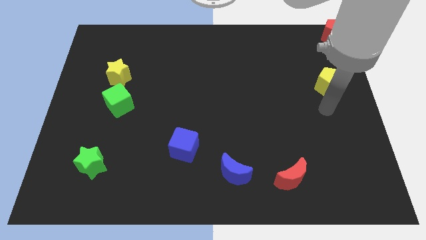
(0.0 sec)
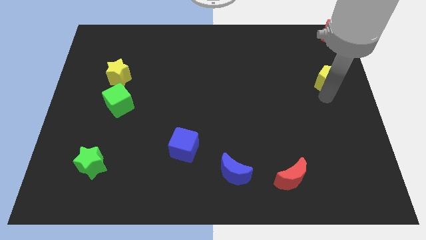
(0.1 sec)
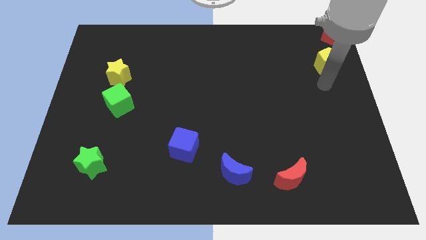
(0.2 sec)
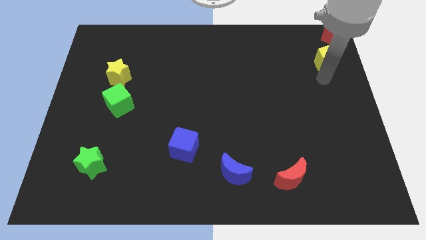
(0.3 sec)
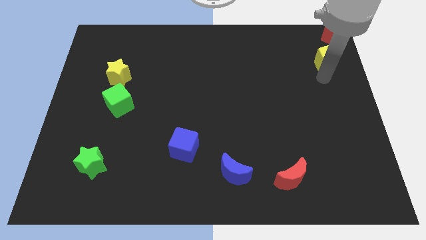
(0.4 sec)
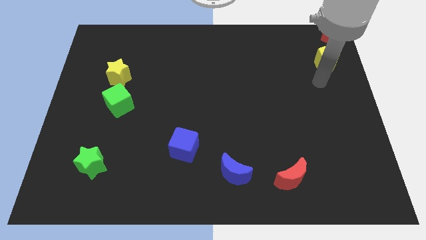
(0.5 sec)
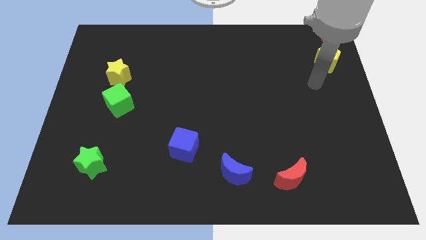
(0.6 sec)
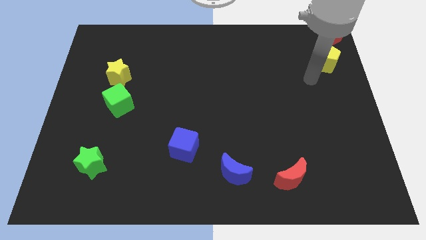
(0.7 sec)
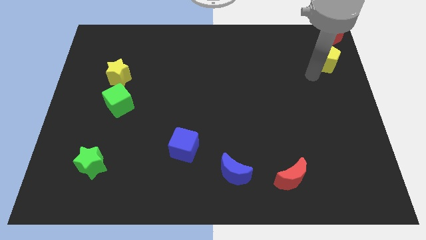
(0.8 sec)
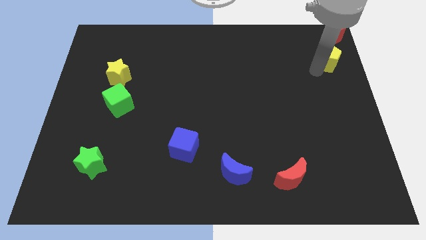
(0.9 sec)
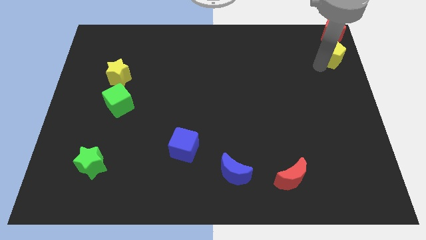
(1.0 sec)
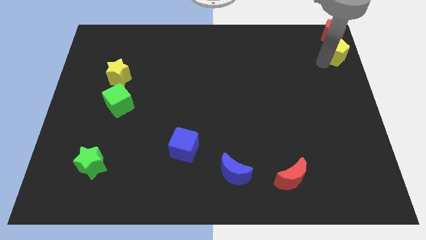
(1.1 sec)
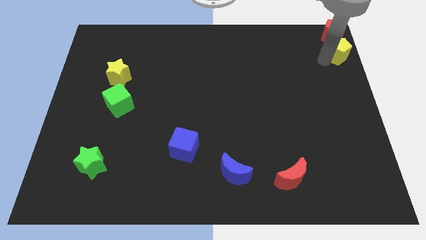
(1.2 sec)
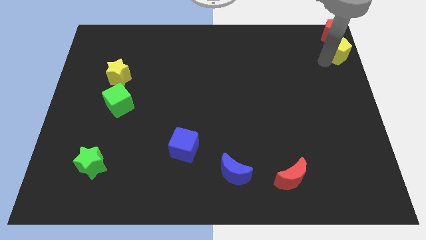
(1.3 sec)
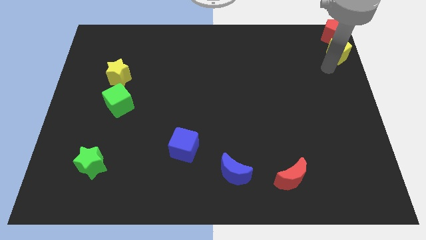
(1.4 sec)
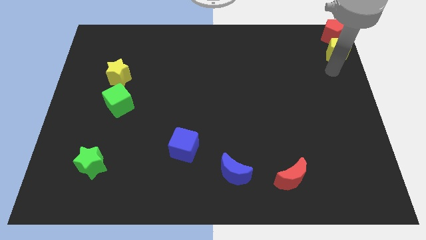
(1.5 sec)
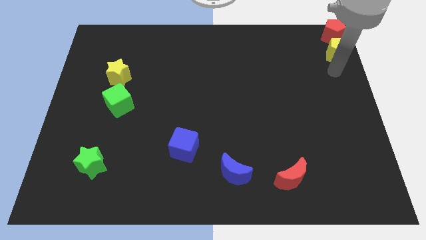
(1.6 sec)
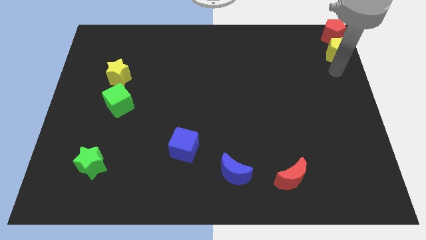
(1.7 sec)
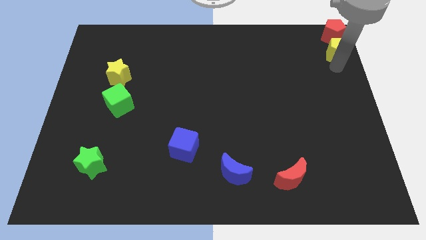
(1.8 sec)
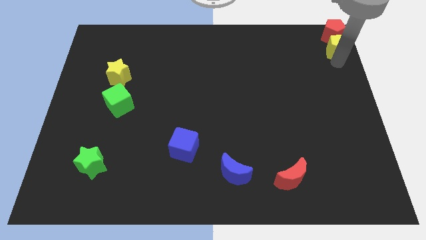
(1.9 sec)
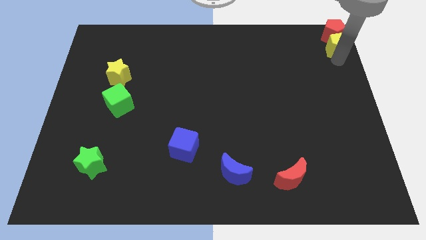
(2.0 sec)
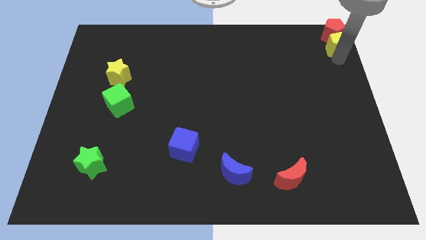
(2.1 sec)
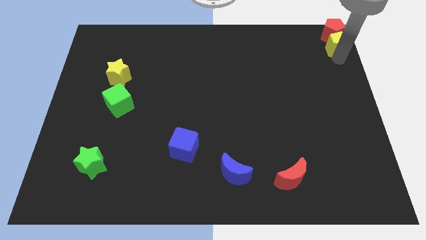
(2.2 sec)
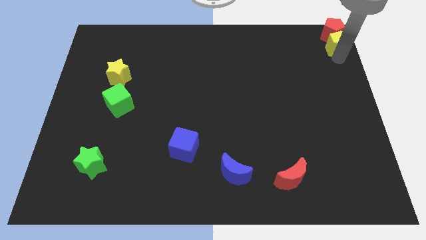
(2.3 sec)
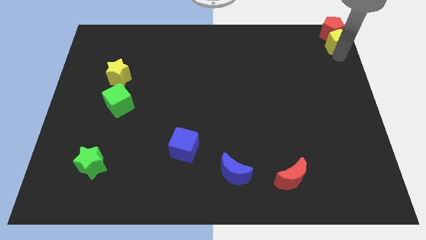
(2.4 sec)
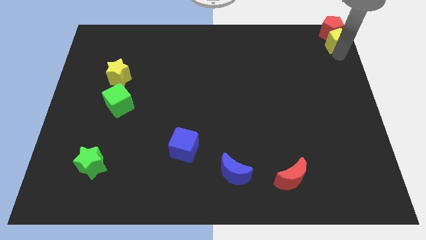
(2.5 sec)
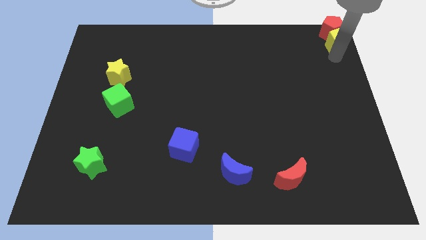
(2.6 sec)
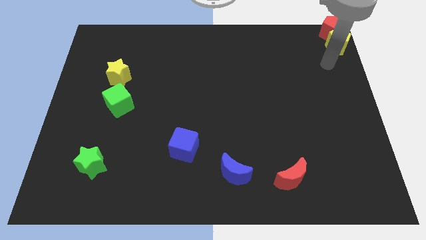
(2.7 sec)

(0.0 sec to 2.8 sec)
move the yellow pentagon into the bottom of the red pentagon

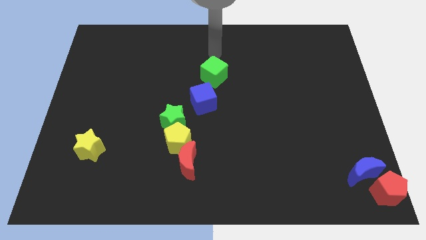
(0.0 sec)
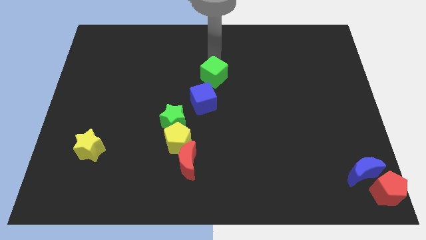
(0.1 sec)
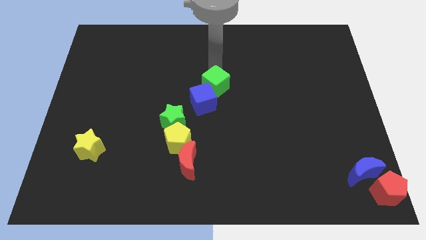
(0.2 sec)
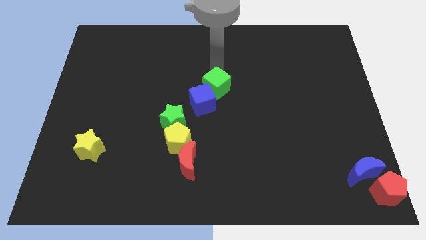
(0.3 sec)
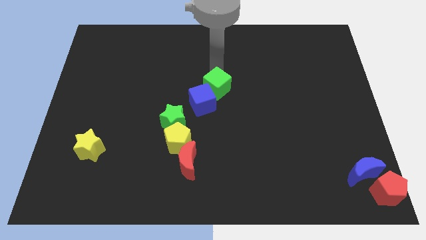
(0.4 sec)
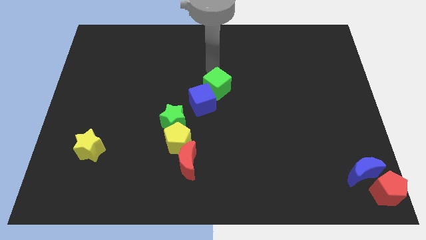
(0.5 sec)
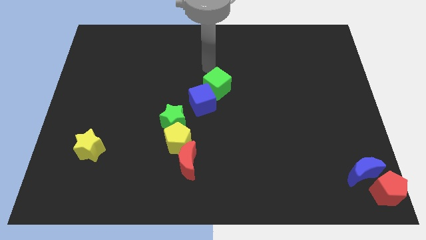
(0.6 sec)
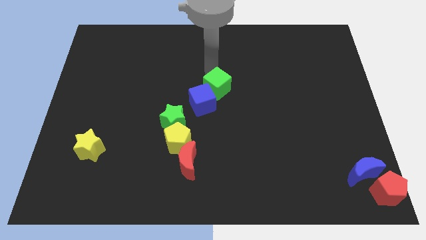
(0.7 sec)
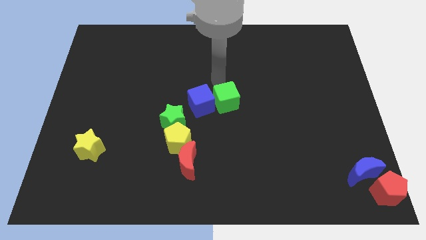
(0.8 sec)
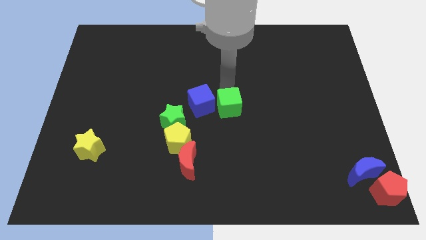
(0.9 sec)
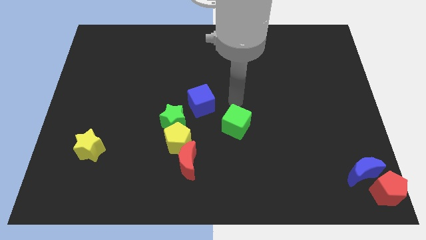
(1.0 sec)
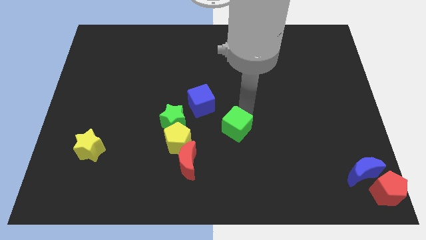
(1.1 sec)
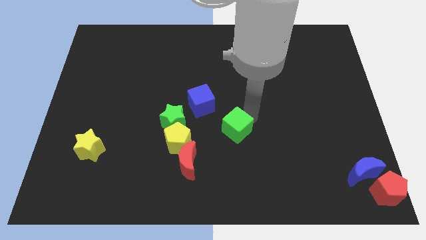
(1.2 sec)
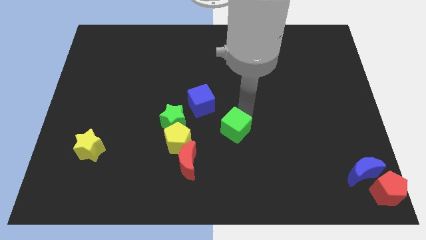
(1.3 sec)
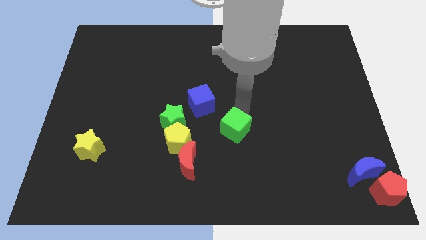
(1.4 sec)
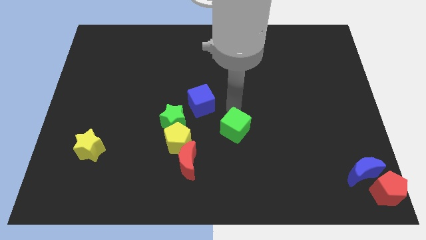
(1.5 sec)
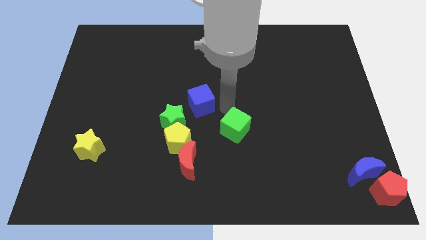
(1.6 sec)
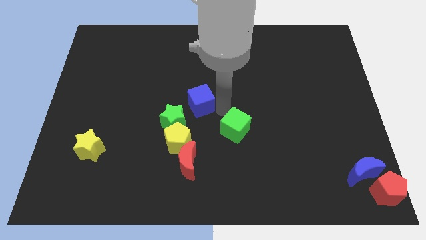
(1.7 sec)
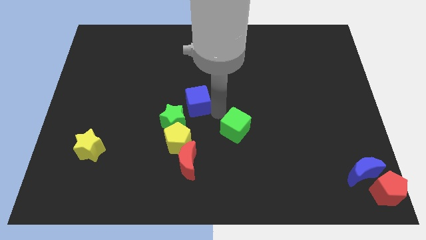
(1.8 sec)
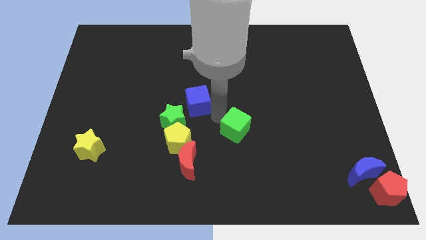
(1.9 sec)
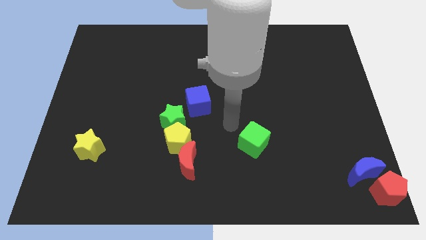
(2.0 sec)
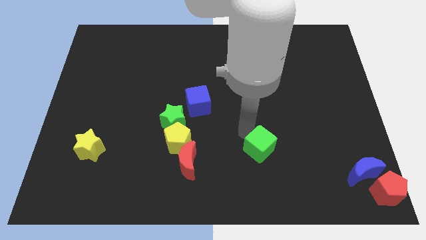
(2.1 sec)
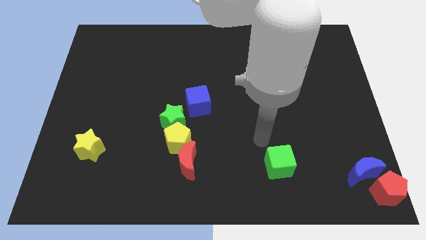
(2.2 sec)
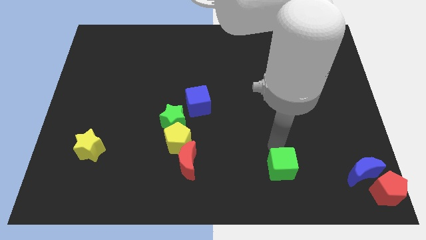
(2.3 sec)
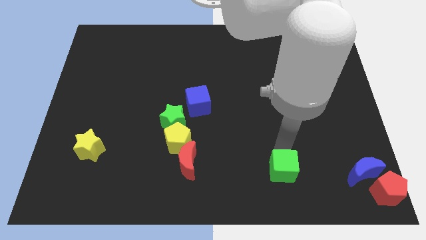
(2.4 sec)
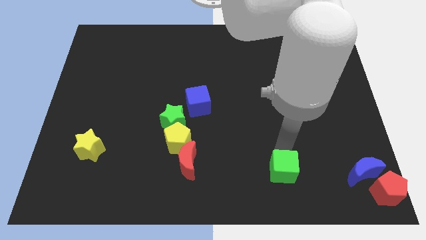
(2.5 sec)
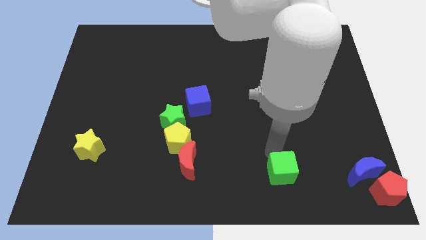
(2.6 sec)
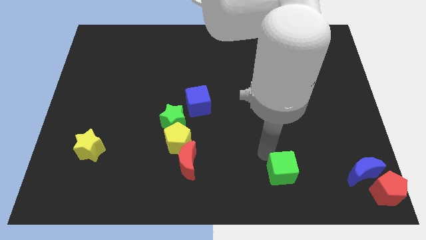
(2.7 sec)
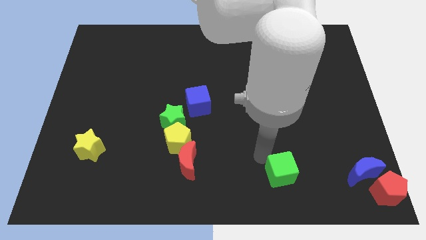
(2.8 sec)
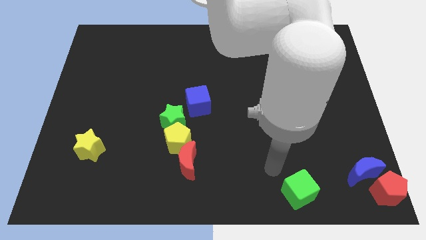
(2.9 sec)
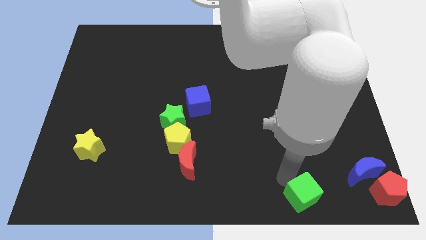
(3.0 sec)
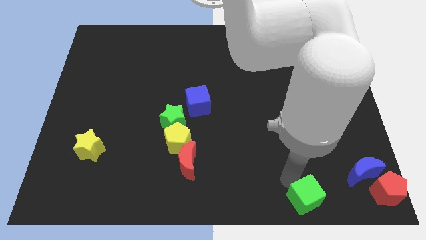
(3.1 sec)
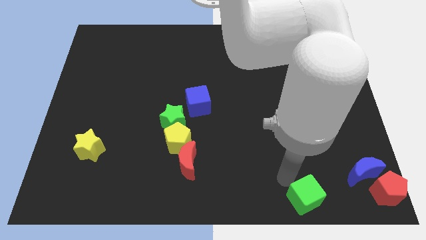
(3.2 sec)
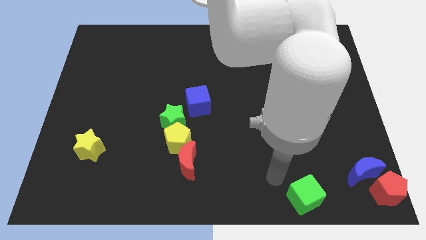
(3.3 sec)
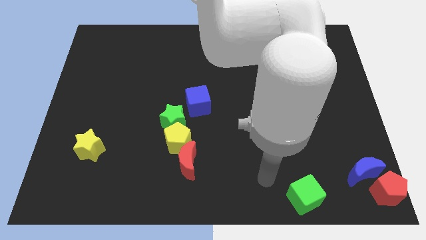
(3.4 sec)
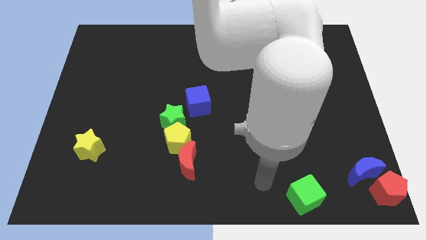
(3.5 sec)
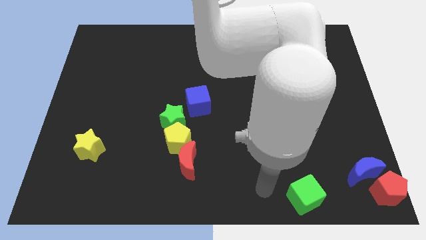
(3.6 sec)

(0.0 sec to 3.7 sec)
push the green cube towards the bottom of the board

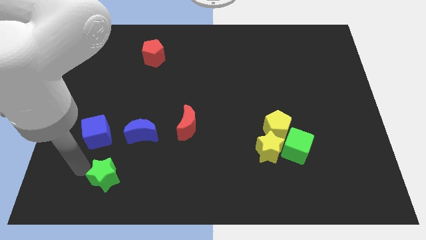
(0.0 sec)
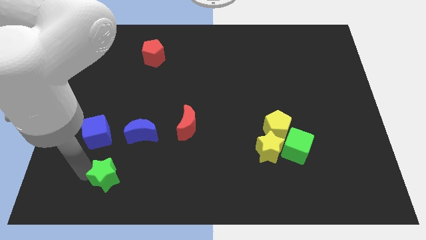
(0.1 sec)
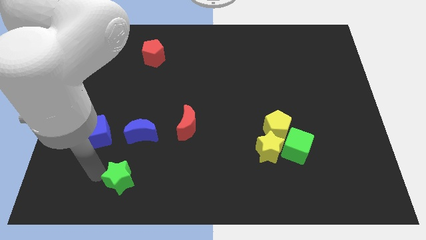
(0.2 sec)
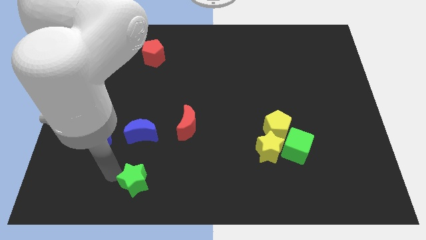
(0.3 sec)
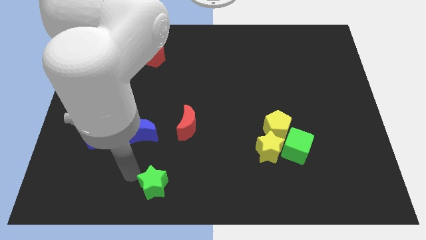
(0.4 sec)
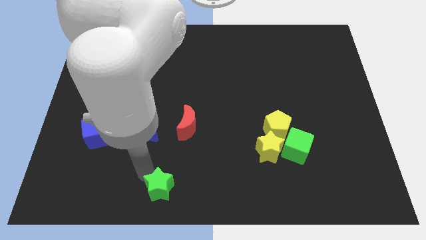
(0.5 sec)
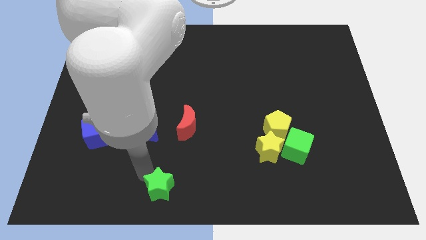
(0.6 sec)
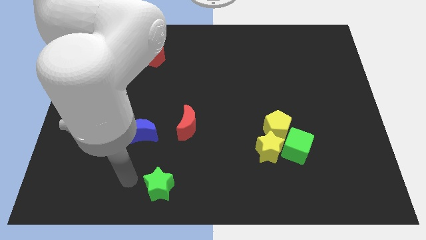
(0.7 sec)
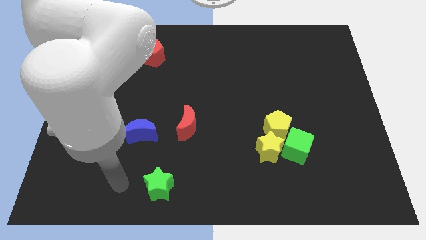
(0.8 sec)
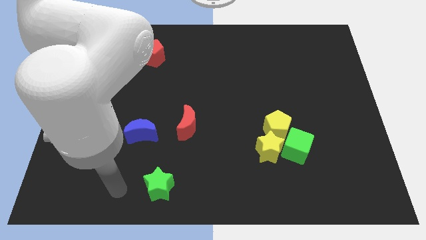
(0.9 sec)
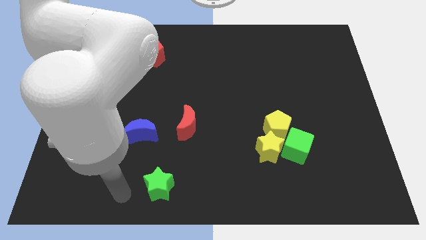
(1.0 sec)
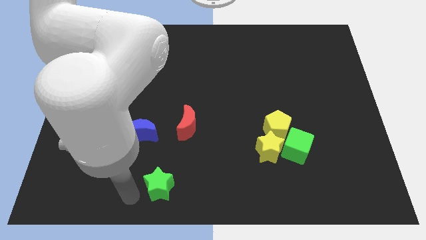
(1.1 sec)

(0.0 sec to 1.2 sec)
place the green star diagonally below the red crescent

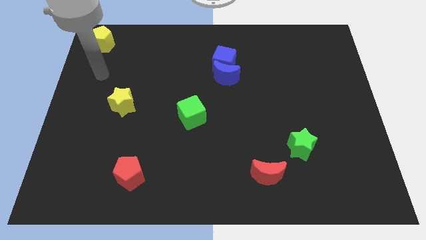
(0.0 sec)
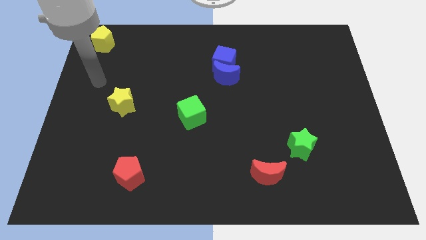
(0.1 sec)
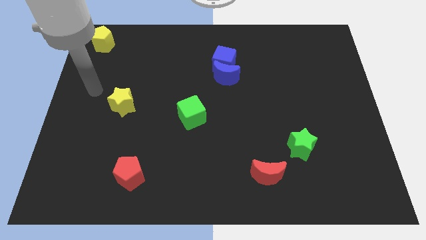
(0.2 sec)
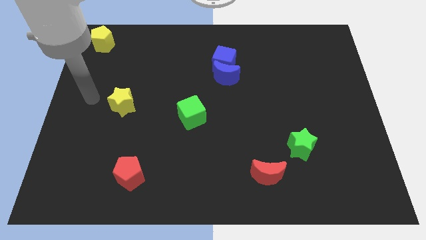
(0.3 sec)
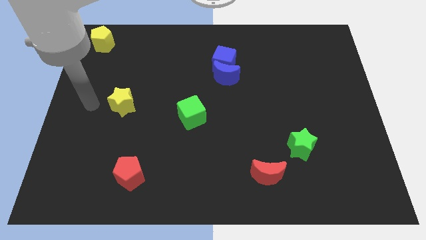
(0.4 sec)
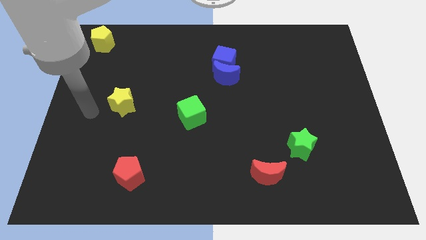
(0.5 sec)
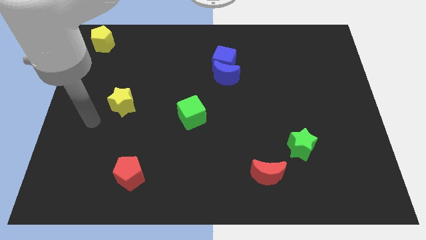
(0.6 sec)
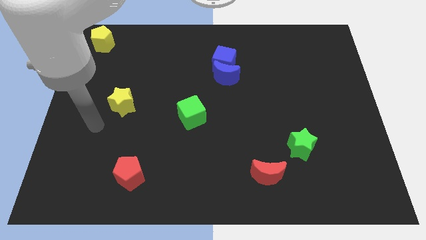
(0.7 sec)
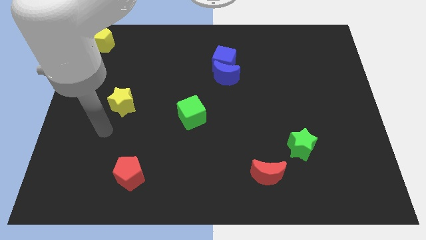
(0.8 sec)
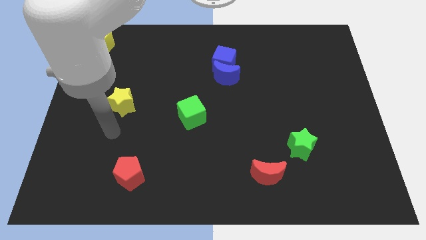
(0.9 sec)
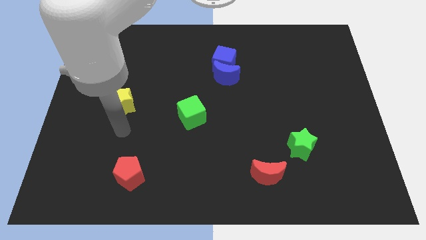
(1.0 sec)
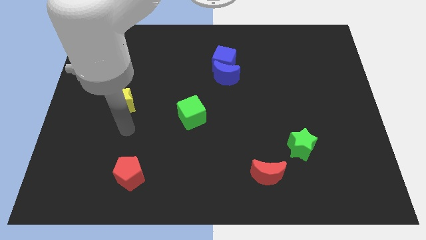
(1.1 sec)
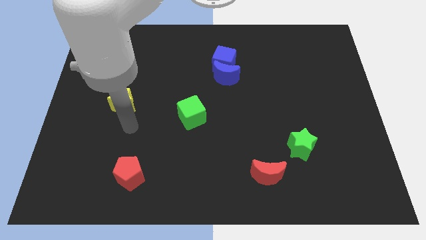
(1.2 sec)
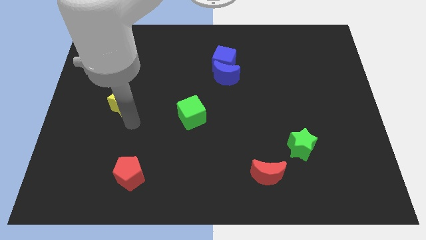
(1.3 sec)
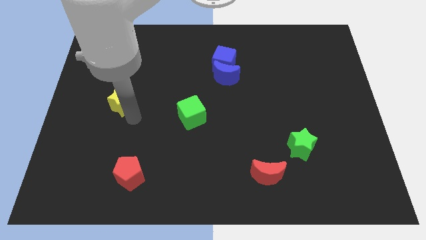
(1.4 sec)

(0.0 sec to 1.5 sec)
move the arm towards the yellow star
